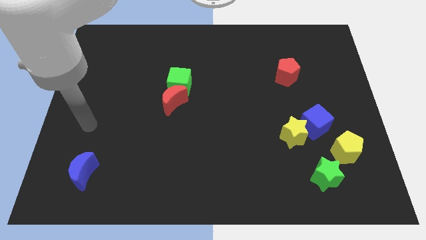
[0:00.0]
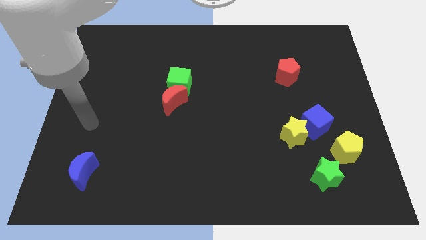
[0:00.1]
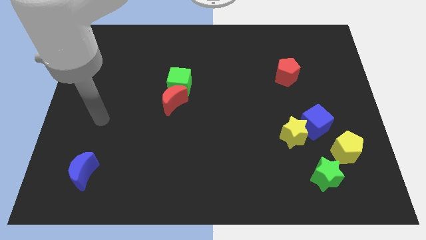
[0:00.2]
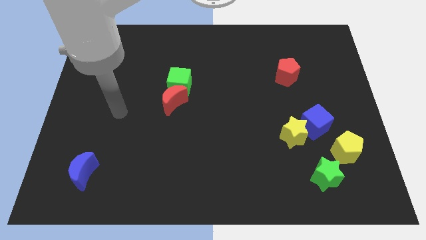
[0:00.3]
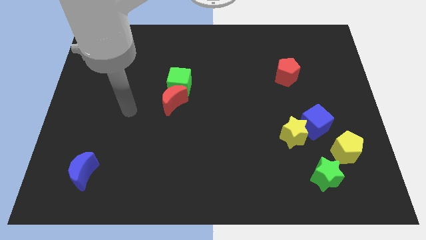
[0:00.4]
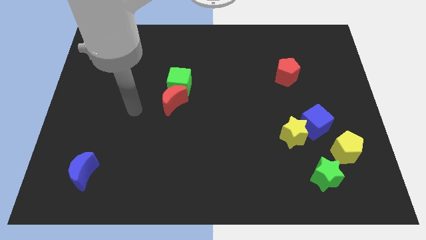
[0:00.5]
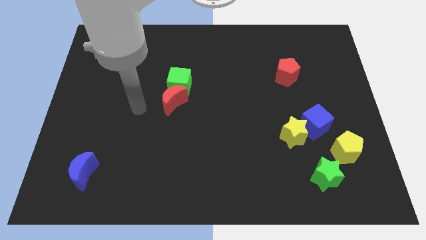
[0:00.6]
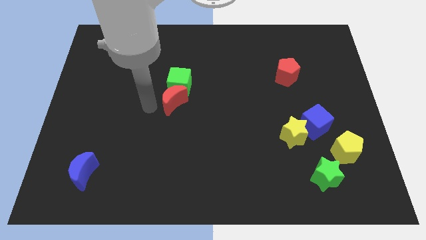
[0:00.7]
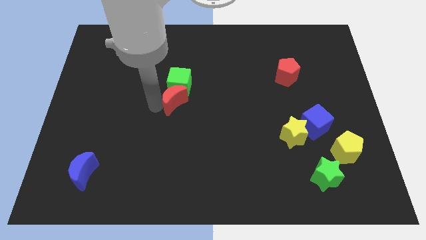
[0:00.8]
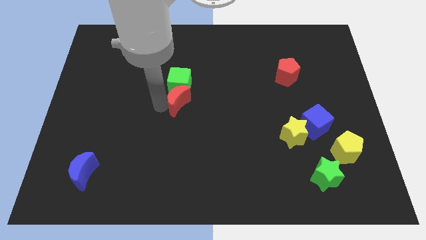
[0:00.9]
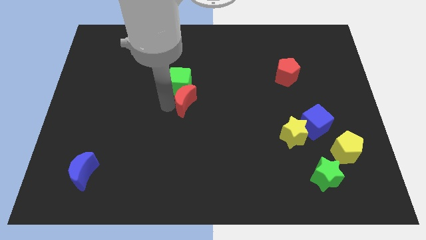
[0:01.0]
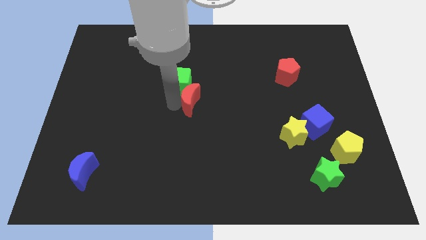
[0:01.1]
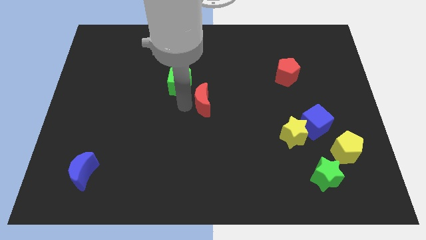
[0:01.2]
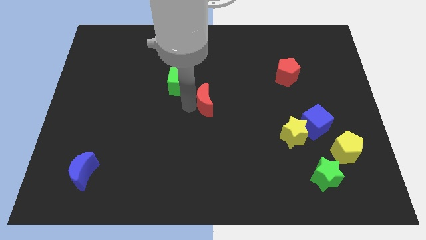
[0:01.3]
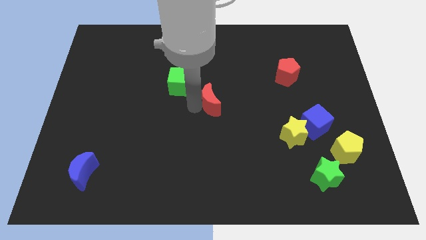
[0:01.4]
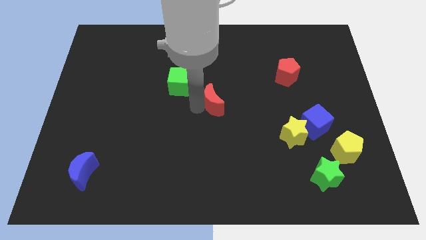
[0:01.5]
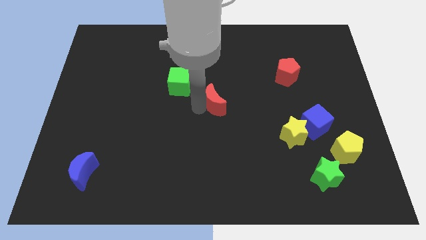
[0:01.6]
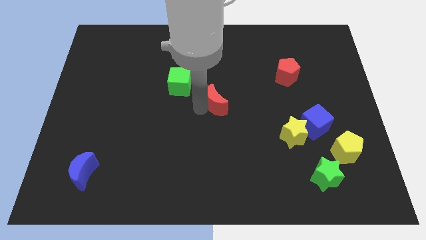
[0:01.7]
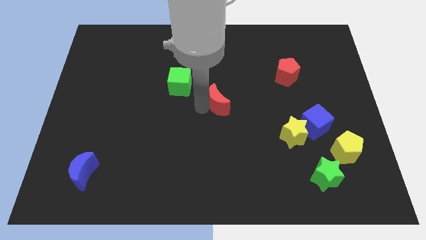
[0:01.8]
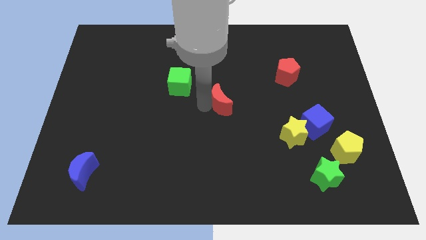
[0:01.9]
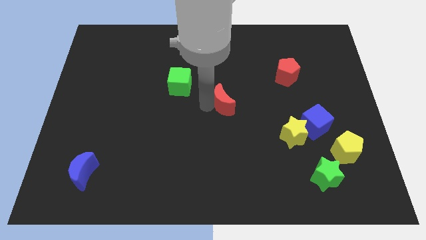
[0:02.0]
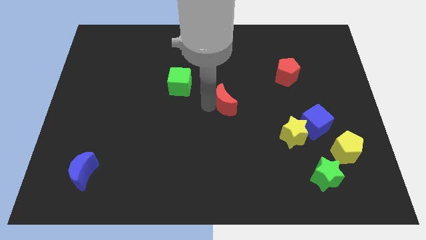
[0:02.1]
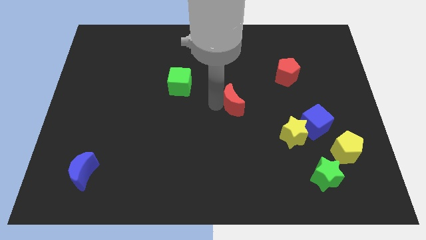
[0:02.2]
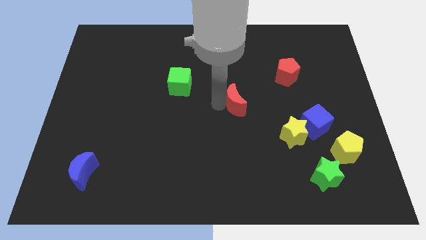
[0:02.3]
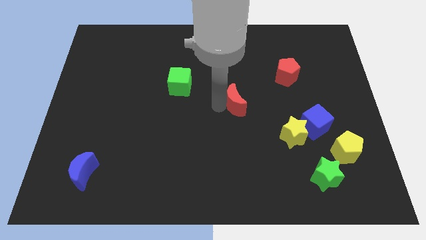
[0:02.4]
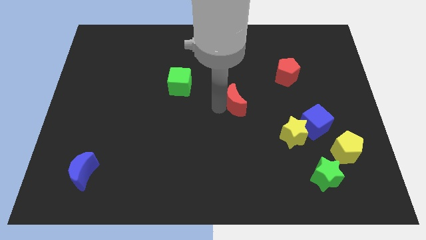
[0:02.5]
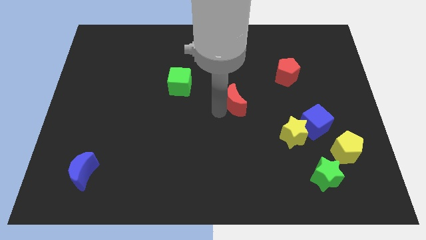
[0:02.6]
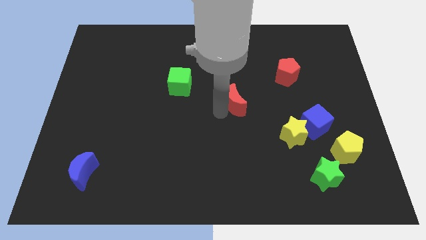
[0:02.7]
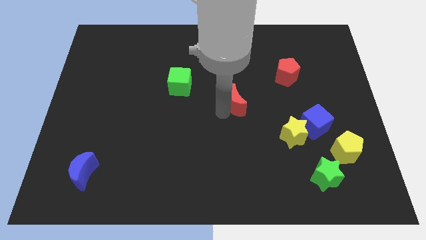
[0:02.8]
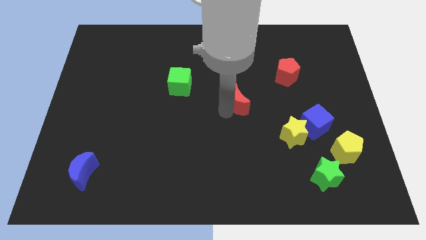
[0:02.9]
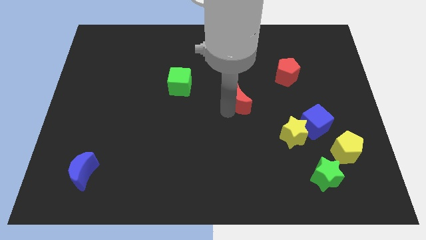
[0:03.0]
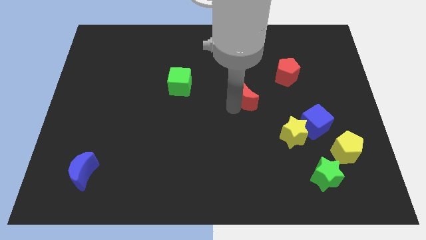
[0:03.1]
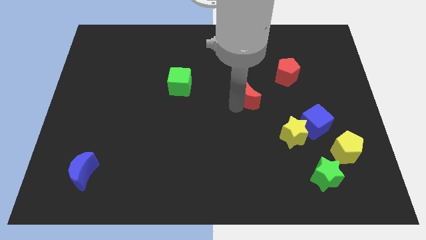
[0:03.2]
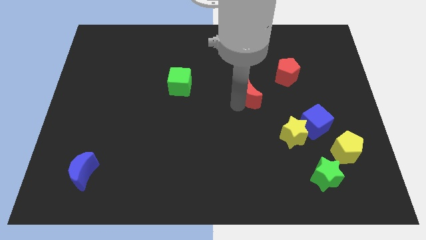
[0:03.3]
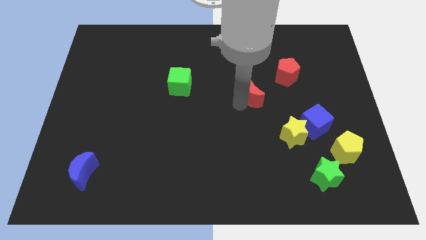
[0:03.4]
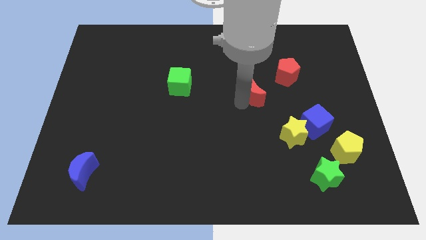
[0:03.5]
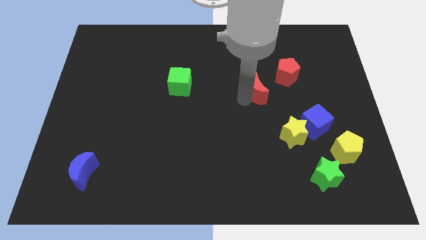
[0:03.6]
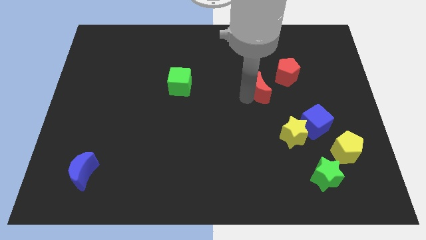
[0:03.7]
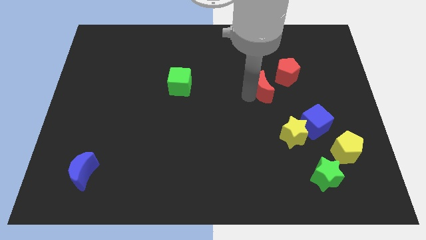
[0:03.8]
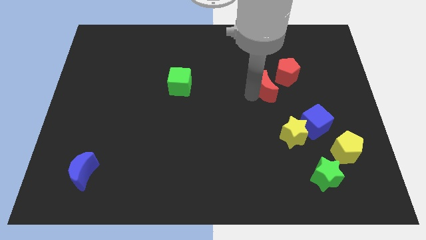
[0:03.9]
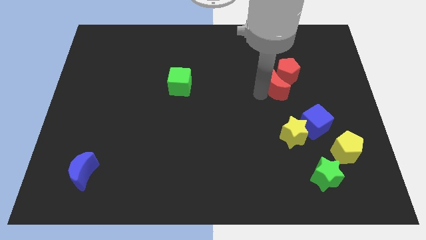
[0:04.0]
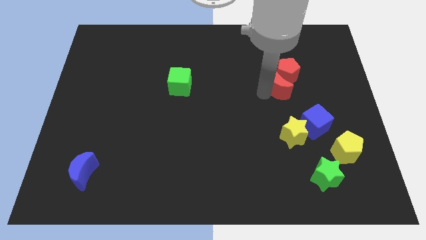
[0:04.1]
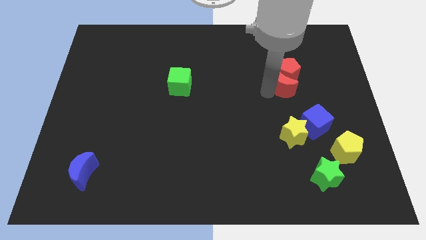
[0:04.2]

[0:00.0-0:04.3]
move the red moon next to the red pentagon

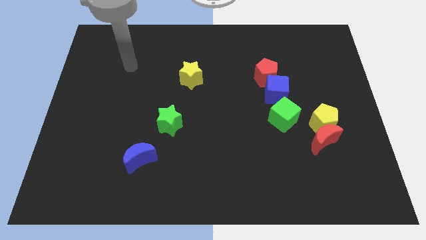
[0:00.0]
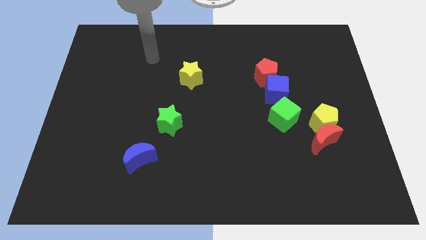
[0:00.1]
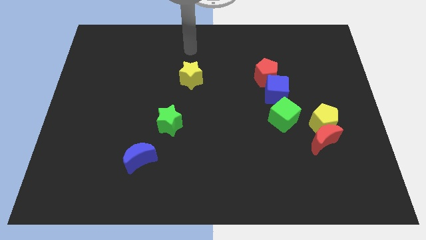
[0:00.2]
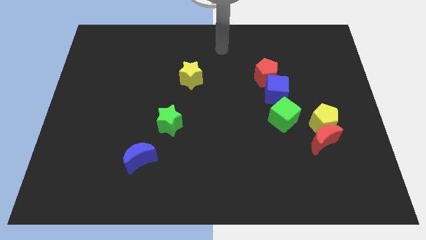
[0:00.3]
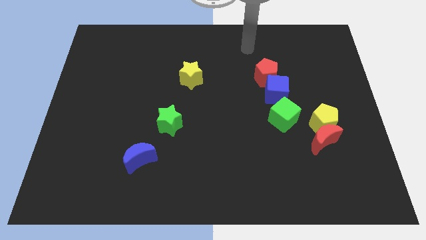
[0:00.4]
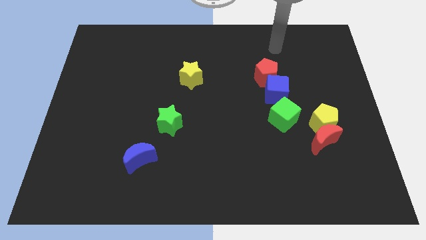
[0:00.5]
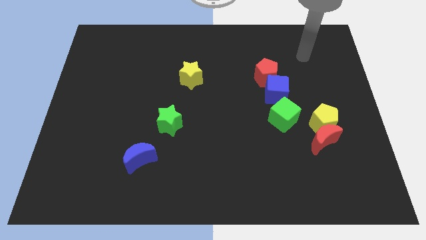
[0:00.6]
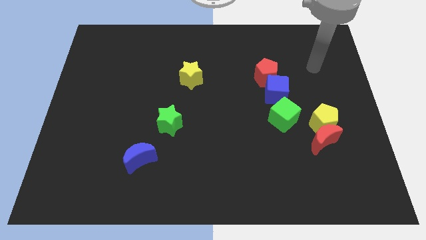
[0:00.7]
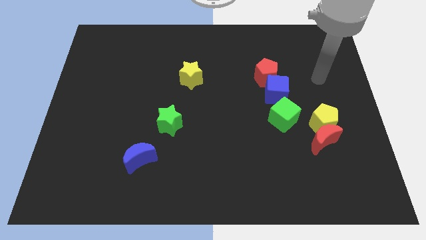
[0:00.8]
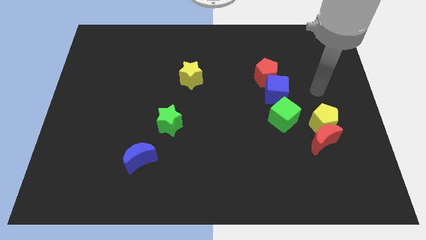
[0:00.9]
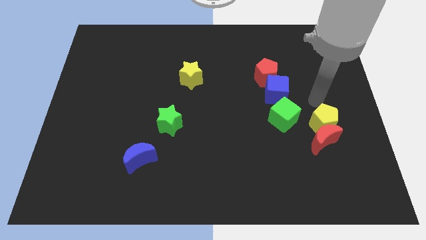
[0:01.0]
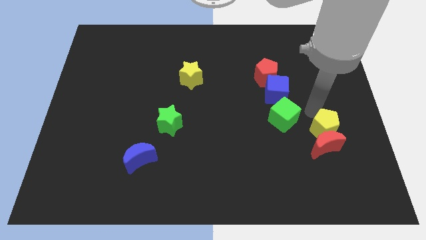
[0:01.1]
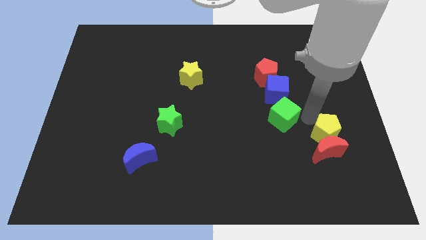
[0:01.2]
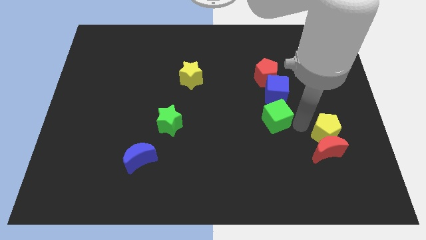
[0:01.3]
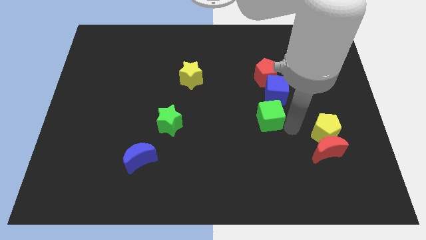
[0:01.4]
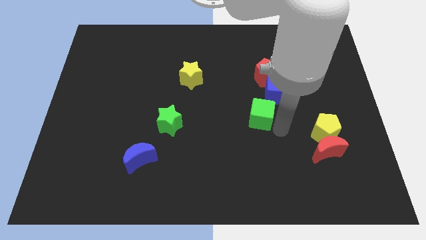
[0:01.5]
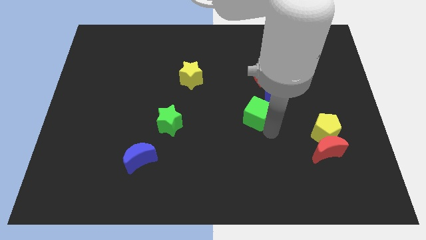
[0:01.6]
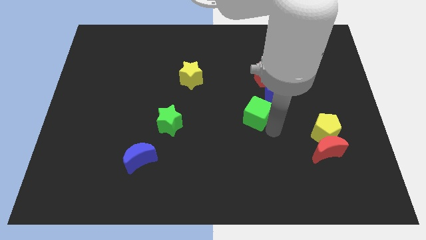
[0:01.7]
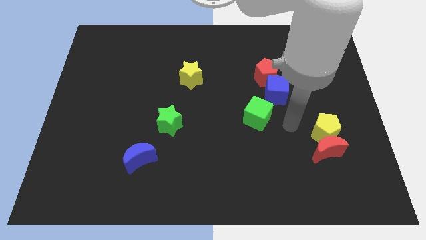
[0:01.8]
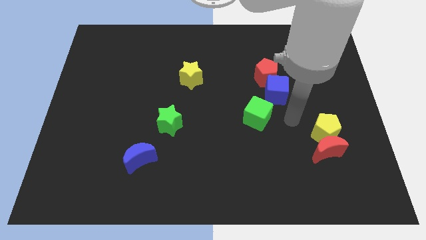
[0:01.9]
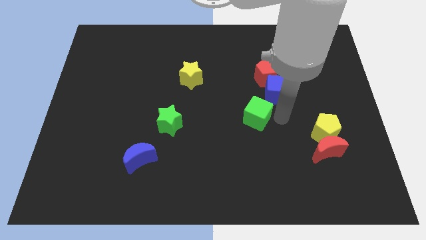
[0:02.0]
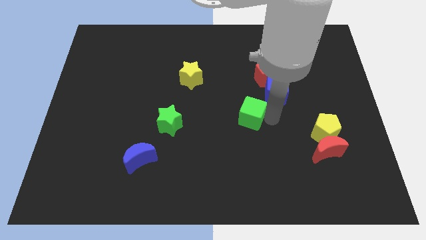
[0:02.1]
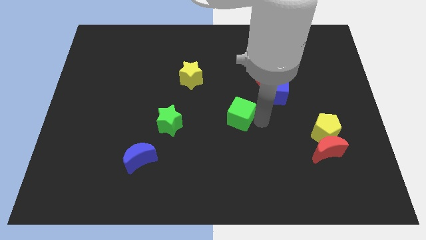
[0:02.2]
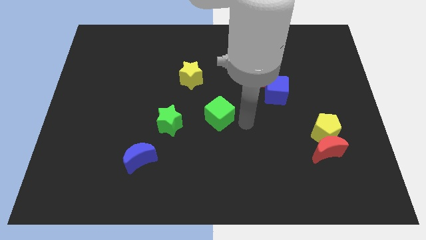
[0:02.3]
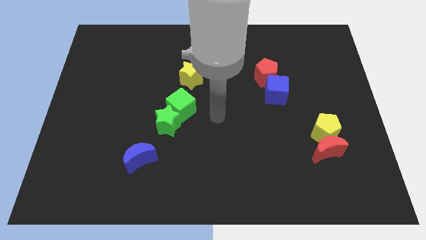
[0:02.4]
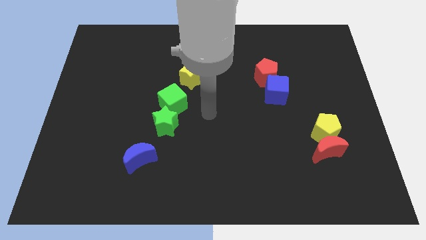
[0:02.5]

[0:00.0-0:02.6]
put the green cube close to the green star

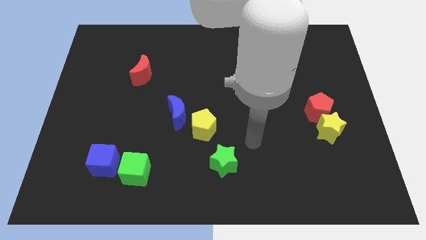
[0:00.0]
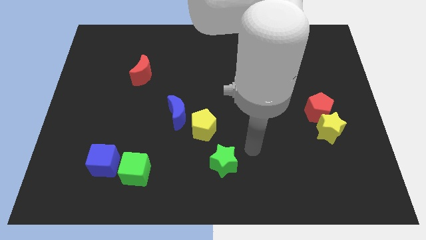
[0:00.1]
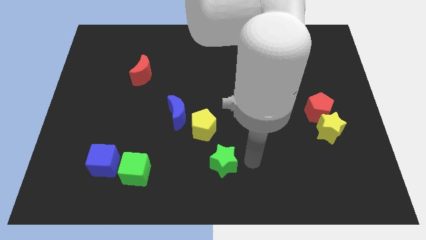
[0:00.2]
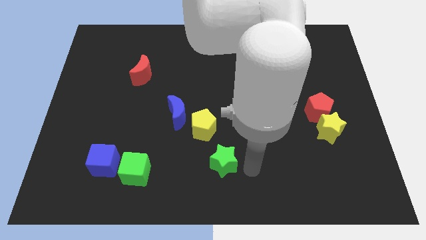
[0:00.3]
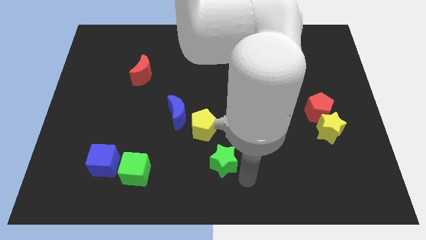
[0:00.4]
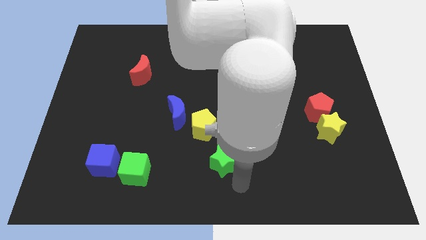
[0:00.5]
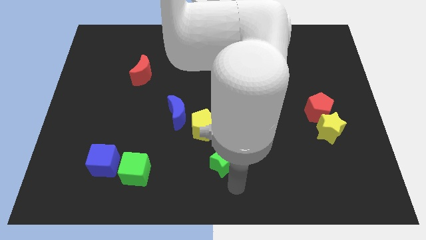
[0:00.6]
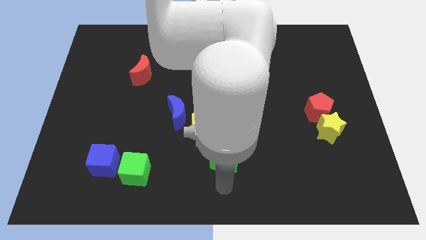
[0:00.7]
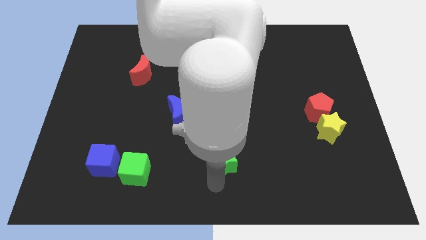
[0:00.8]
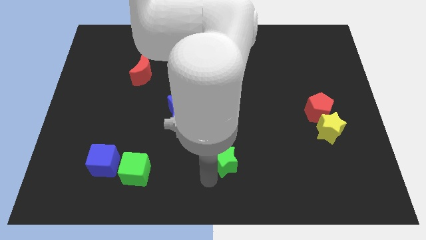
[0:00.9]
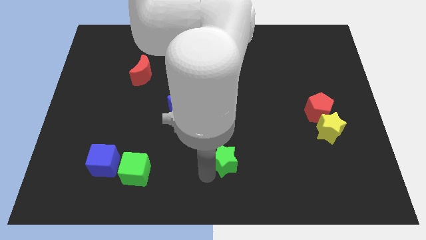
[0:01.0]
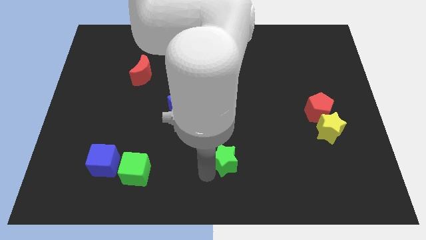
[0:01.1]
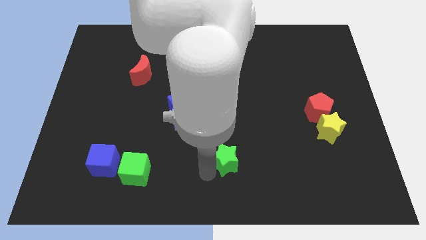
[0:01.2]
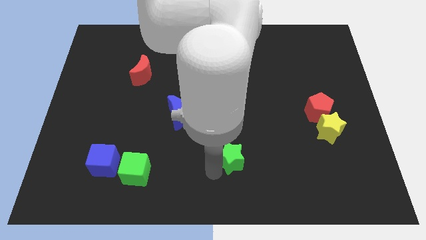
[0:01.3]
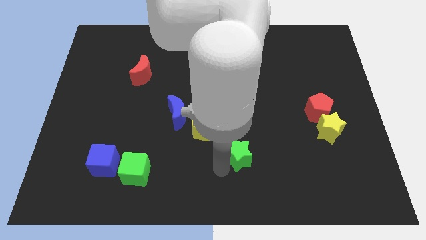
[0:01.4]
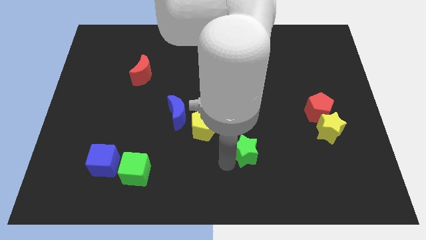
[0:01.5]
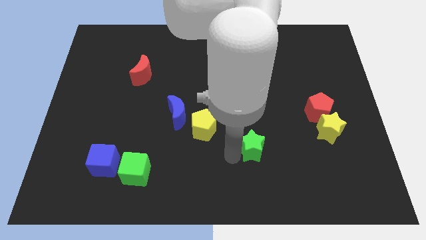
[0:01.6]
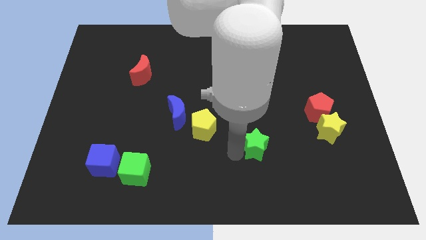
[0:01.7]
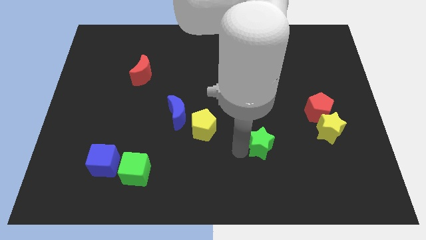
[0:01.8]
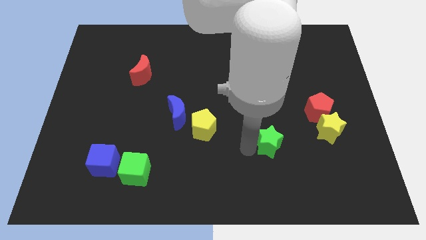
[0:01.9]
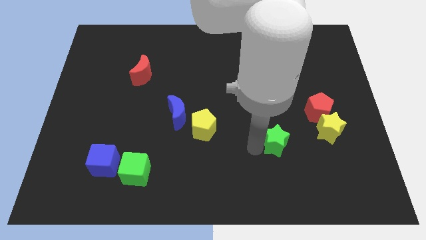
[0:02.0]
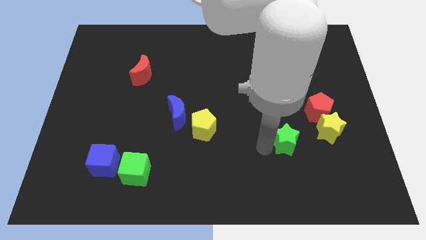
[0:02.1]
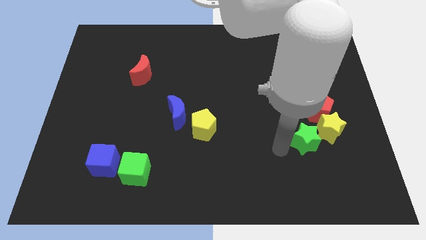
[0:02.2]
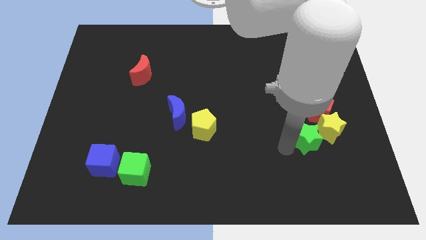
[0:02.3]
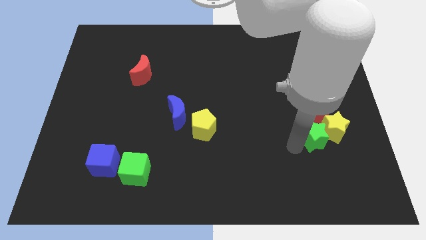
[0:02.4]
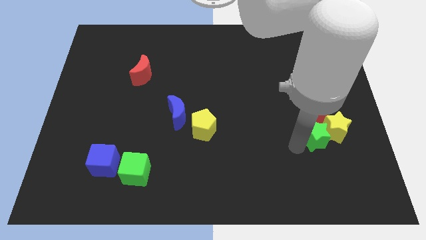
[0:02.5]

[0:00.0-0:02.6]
move the green star to the yellow star
